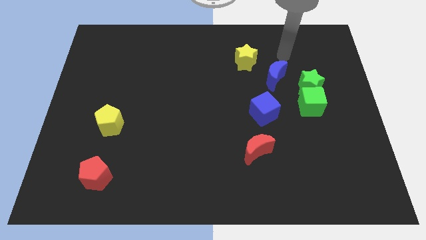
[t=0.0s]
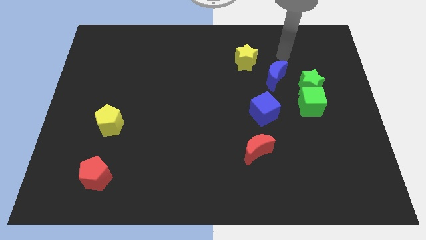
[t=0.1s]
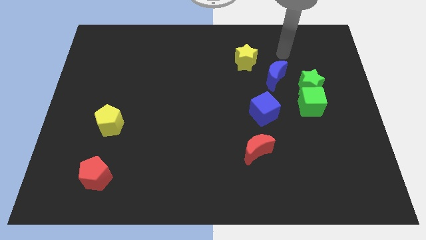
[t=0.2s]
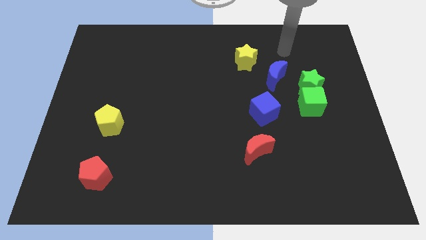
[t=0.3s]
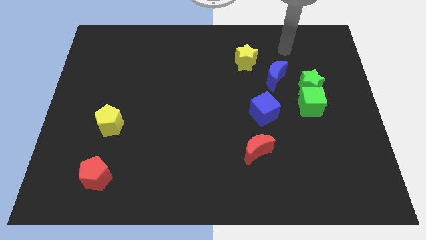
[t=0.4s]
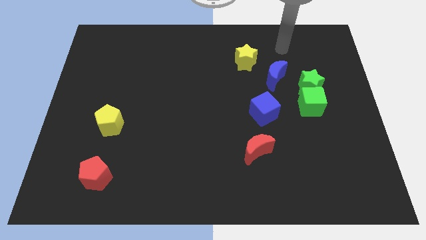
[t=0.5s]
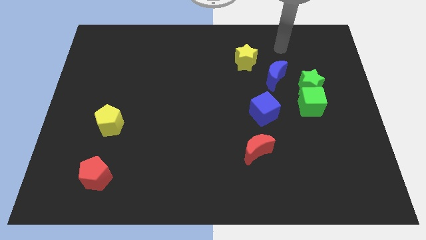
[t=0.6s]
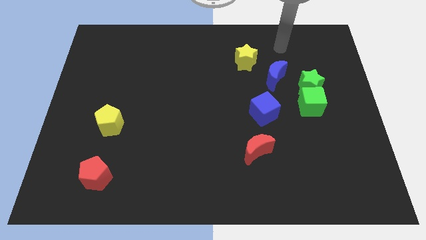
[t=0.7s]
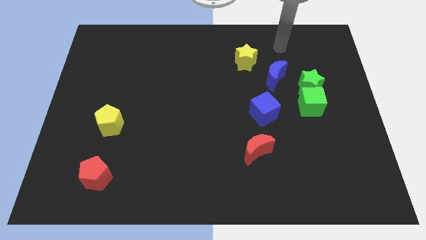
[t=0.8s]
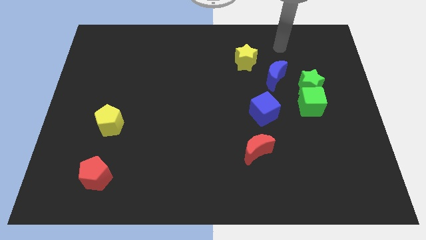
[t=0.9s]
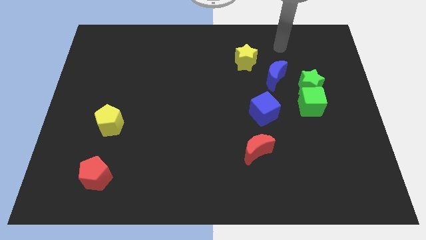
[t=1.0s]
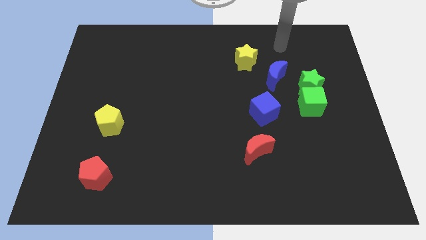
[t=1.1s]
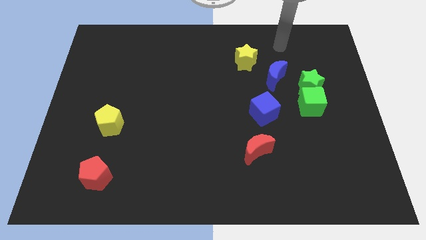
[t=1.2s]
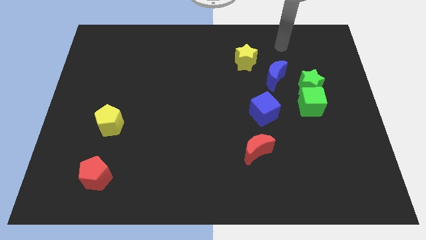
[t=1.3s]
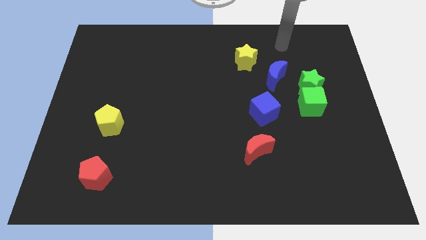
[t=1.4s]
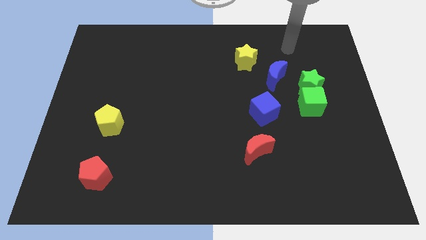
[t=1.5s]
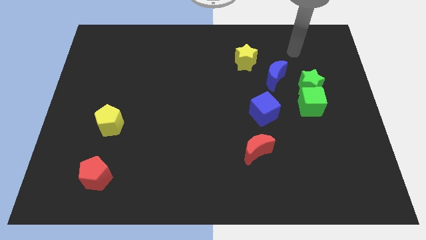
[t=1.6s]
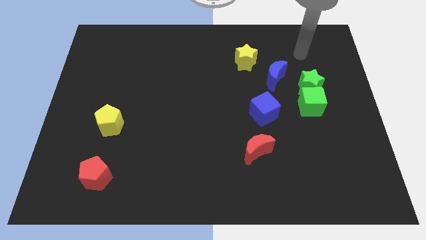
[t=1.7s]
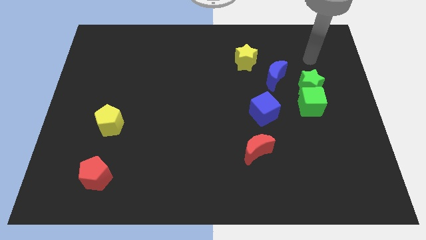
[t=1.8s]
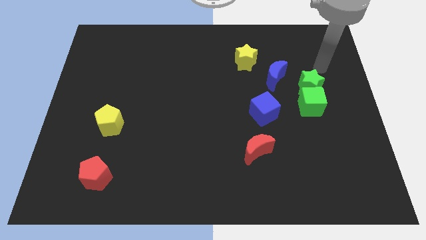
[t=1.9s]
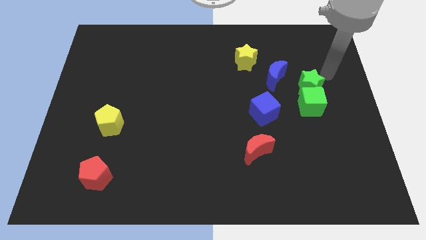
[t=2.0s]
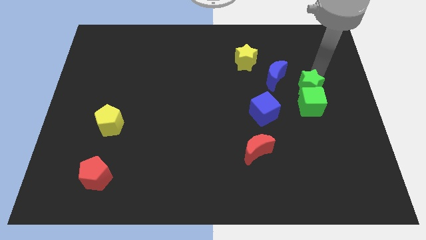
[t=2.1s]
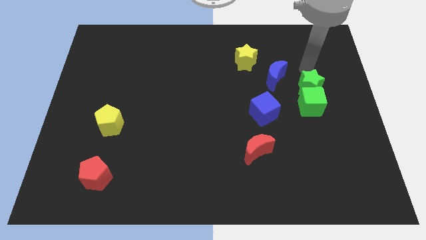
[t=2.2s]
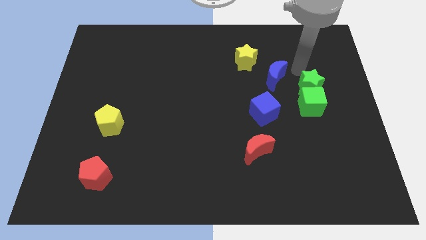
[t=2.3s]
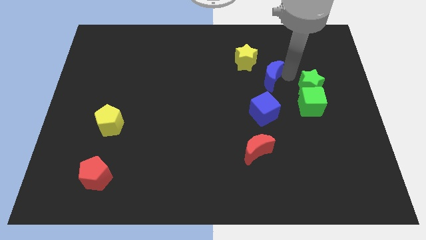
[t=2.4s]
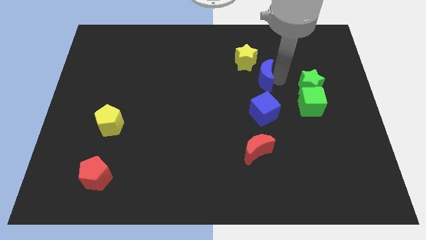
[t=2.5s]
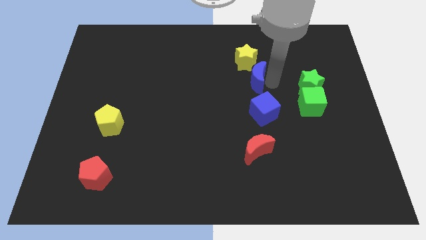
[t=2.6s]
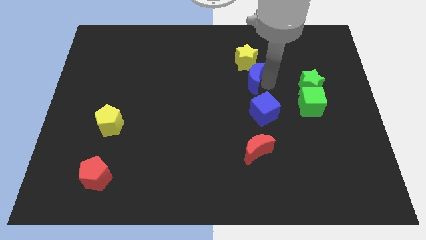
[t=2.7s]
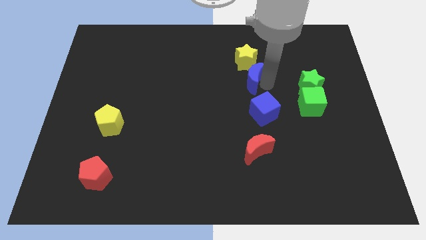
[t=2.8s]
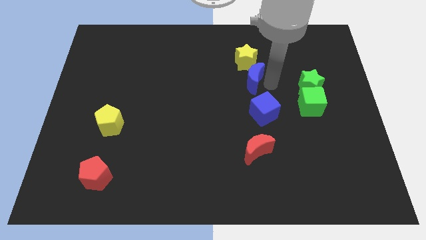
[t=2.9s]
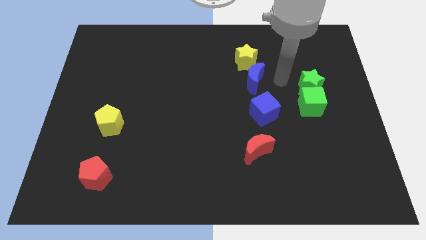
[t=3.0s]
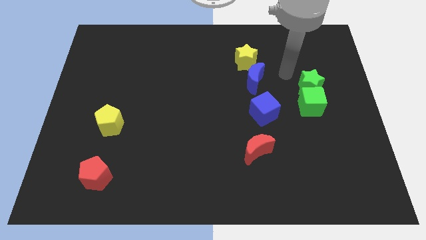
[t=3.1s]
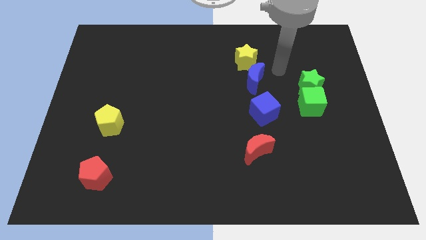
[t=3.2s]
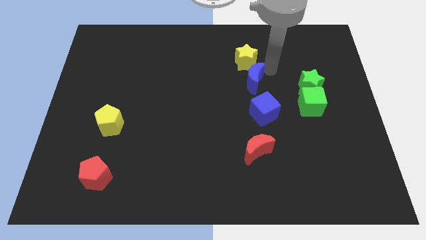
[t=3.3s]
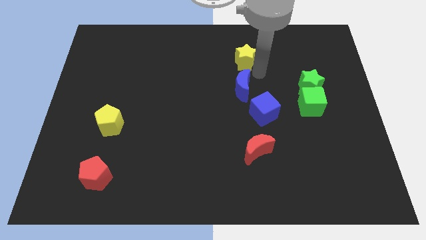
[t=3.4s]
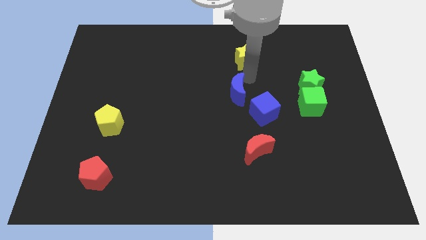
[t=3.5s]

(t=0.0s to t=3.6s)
move the blue crescent below the yellow star

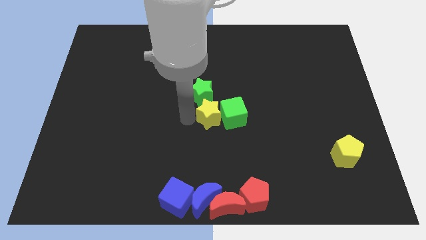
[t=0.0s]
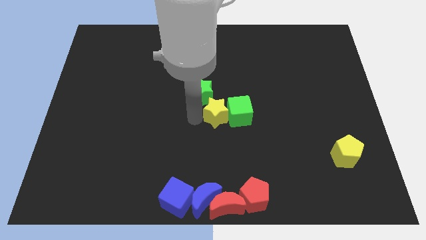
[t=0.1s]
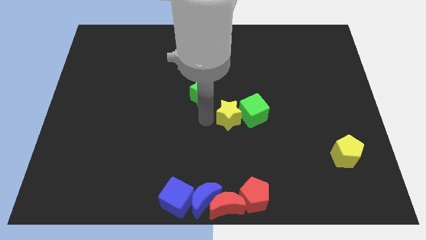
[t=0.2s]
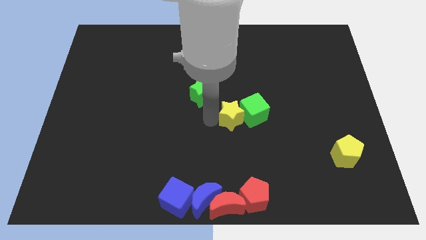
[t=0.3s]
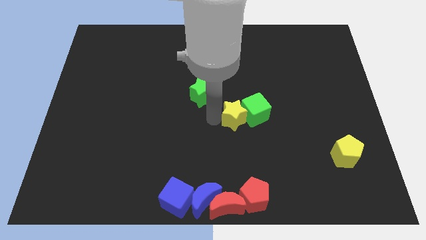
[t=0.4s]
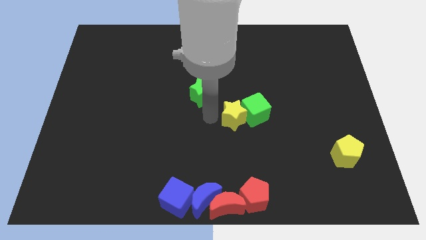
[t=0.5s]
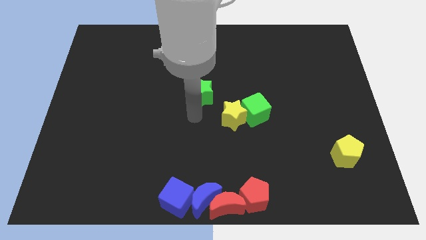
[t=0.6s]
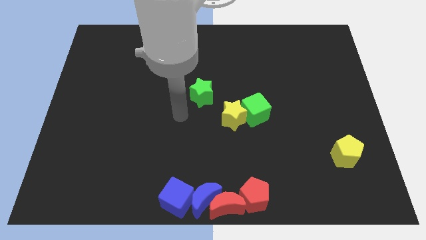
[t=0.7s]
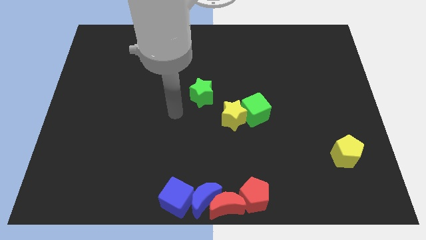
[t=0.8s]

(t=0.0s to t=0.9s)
push the green cube with the help of the yellow star towards the right side of the board

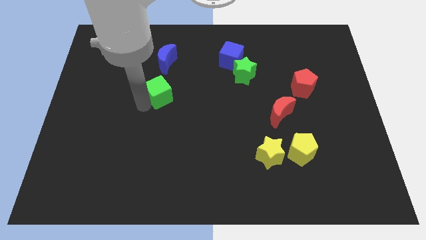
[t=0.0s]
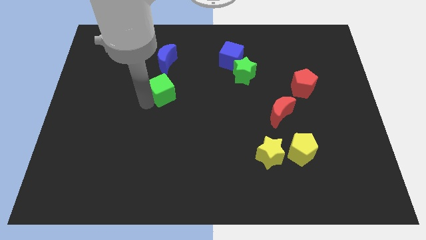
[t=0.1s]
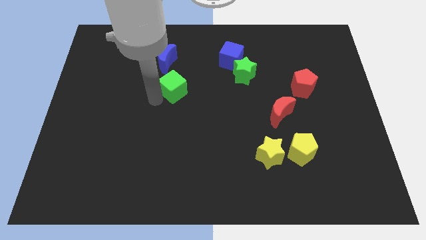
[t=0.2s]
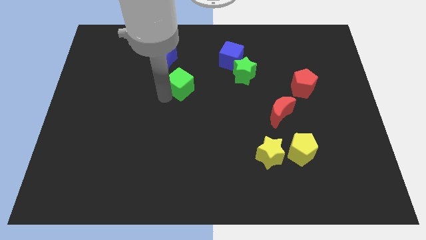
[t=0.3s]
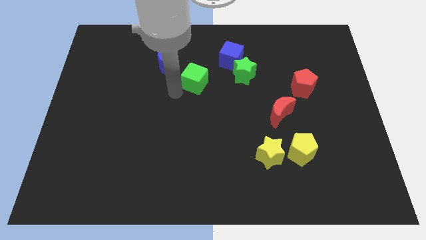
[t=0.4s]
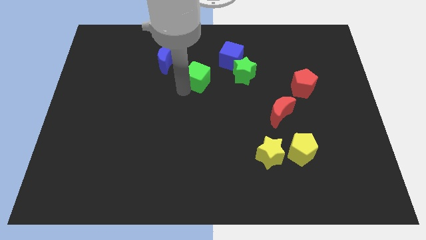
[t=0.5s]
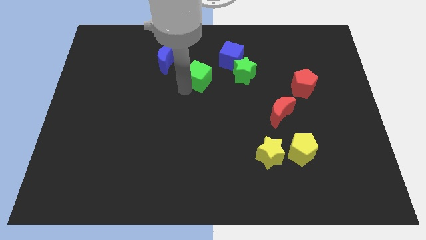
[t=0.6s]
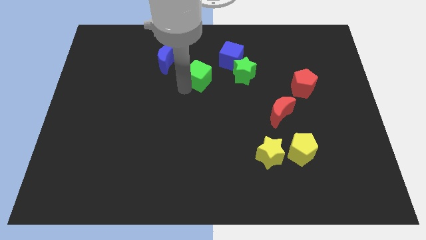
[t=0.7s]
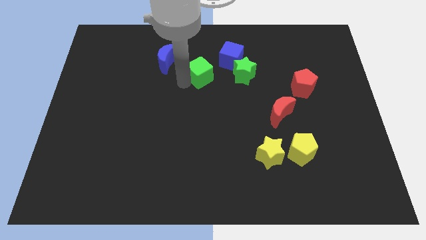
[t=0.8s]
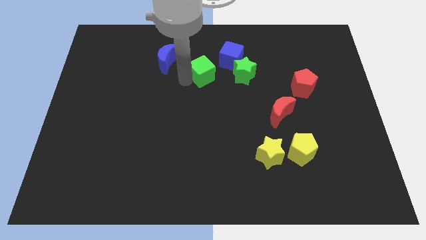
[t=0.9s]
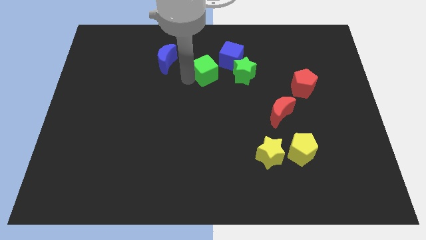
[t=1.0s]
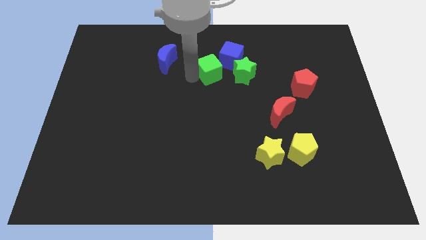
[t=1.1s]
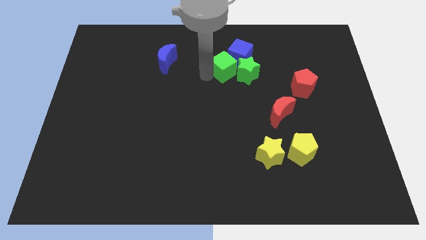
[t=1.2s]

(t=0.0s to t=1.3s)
attach the green cube to the green star

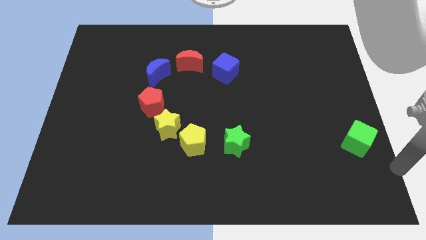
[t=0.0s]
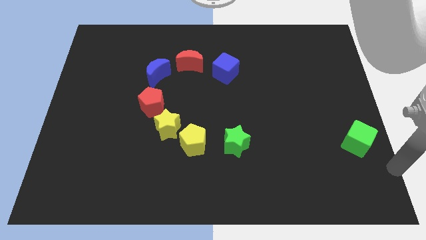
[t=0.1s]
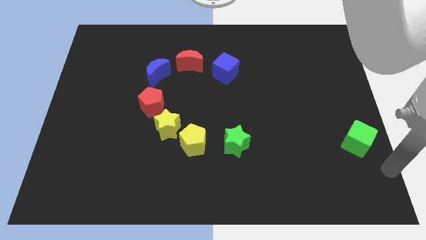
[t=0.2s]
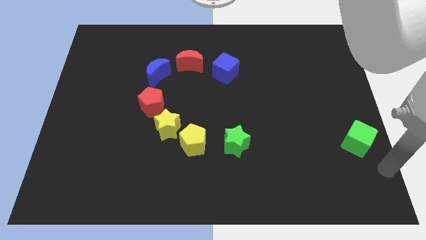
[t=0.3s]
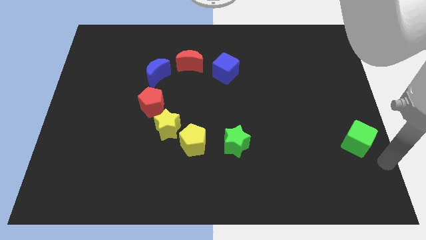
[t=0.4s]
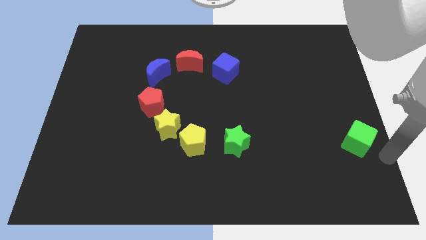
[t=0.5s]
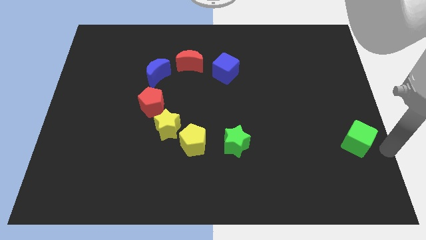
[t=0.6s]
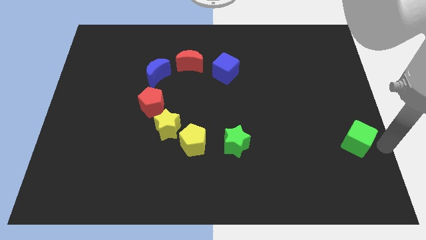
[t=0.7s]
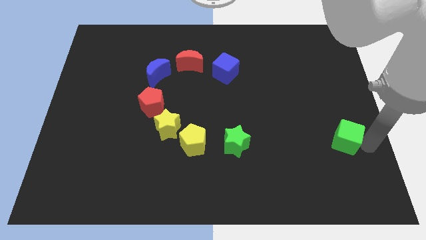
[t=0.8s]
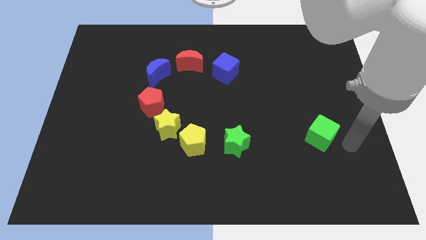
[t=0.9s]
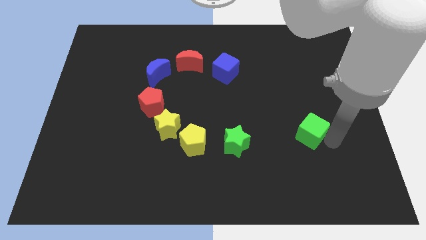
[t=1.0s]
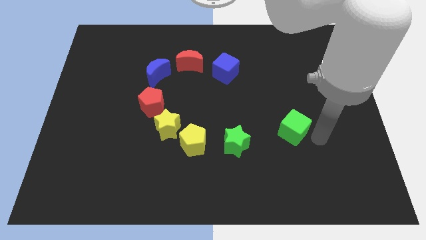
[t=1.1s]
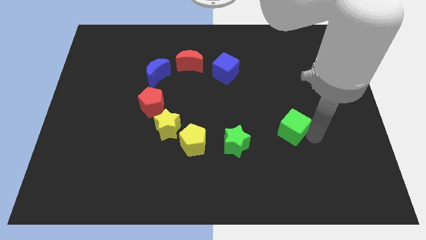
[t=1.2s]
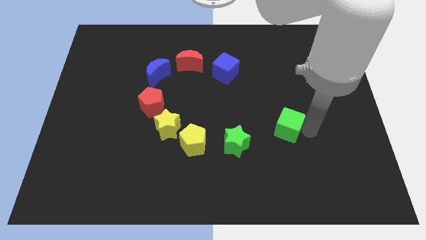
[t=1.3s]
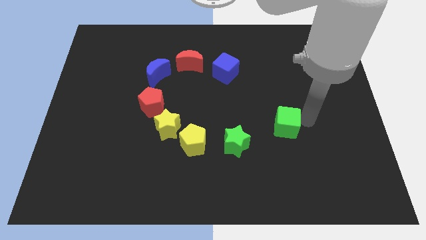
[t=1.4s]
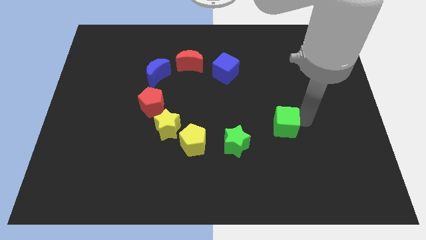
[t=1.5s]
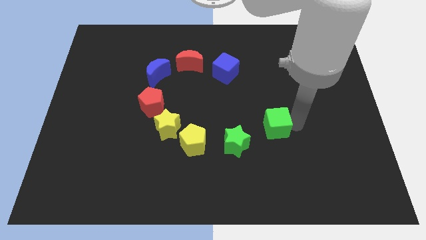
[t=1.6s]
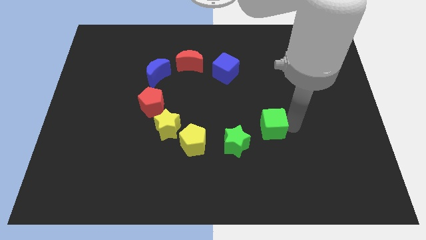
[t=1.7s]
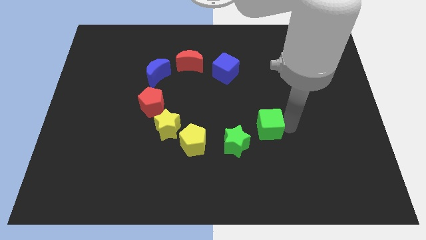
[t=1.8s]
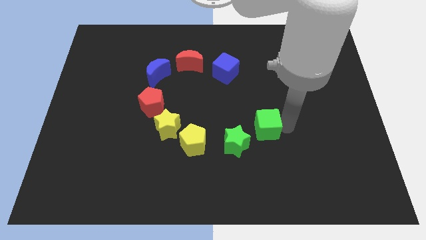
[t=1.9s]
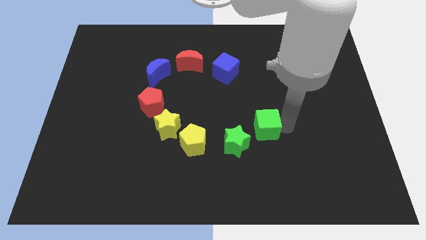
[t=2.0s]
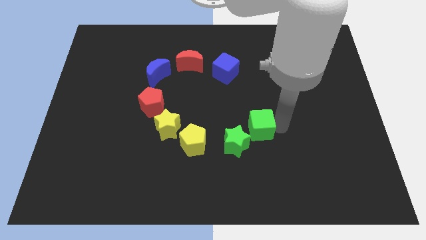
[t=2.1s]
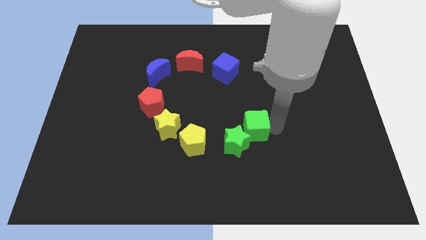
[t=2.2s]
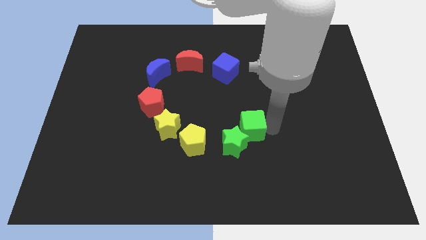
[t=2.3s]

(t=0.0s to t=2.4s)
push the green cube to the right of the green star

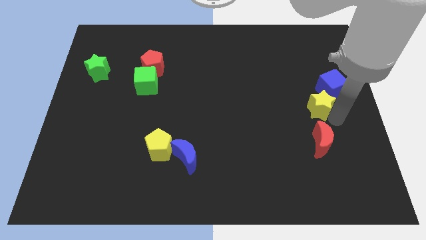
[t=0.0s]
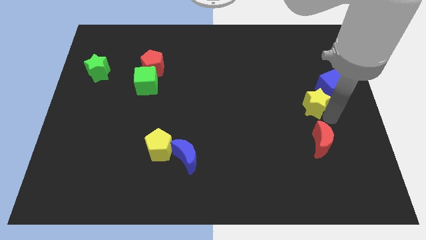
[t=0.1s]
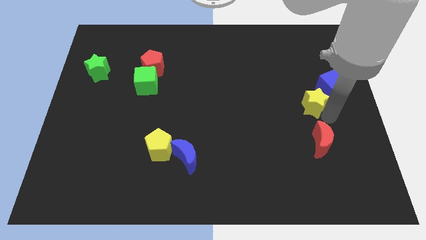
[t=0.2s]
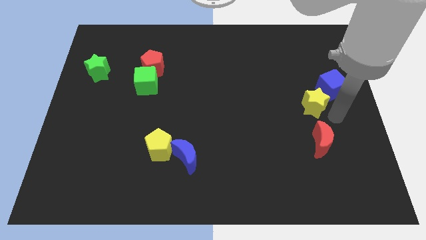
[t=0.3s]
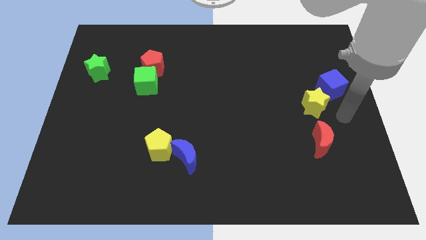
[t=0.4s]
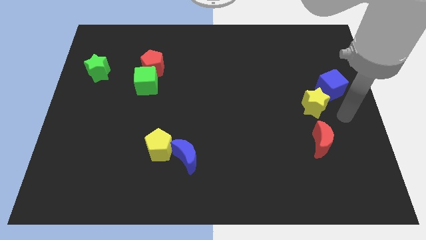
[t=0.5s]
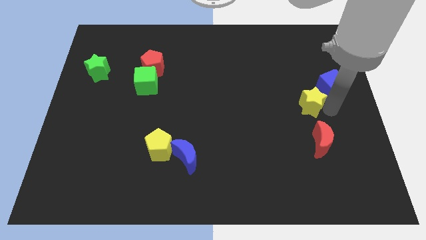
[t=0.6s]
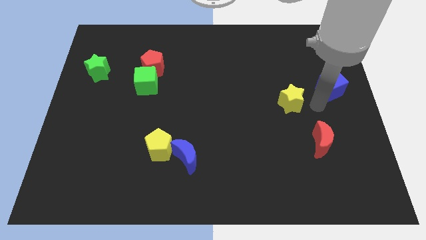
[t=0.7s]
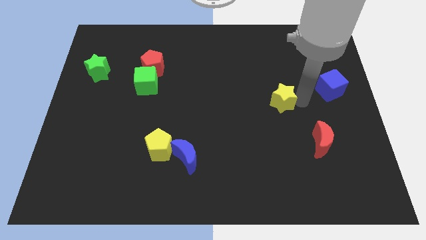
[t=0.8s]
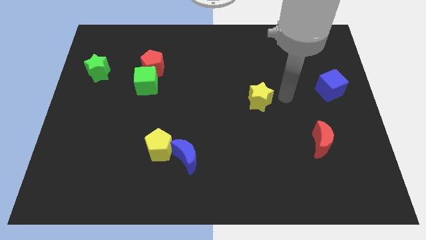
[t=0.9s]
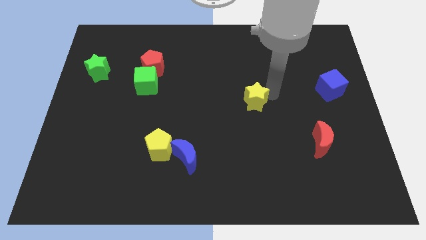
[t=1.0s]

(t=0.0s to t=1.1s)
move yellow star slightly left
